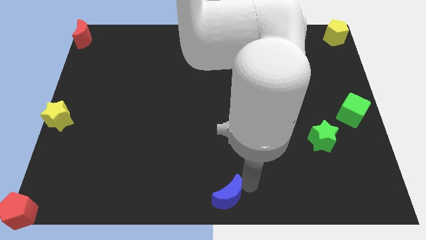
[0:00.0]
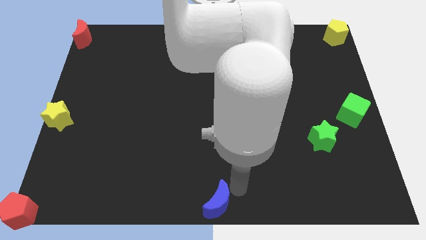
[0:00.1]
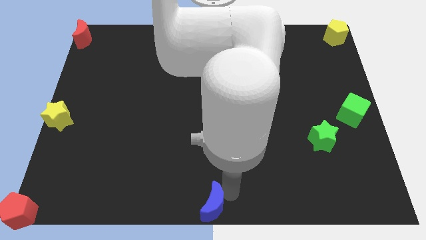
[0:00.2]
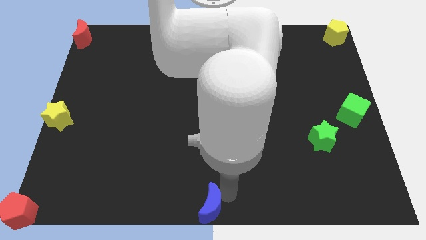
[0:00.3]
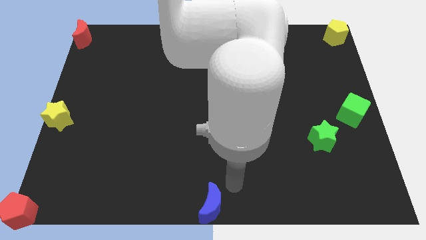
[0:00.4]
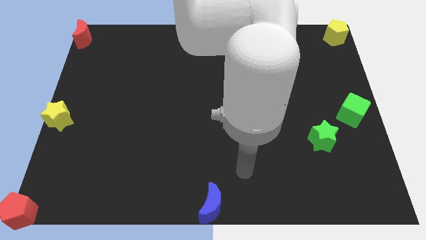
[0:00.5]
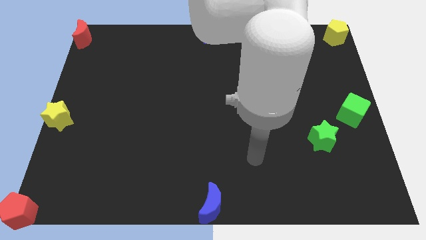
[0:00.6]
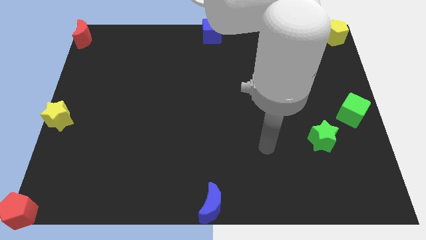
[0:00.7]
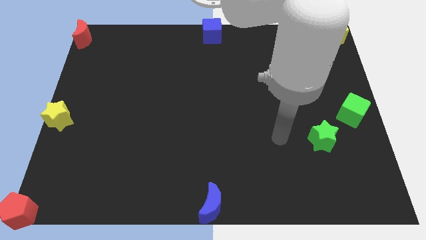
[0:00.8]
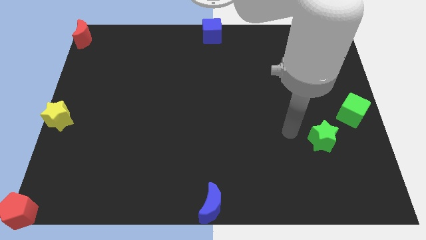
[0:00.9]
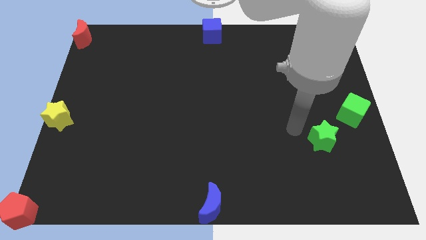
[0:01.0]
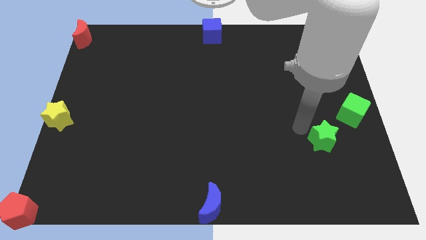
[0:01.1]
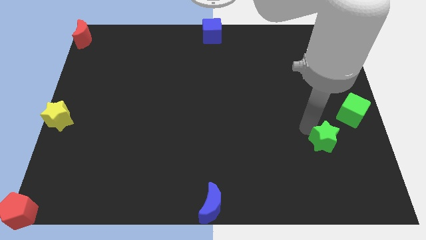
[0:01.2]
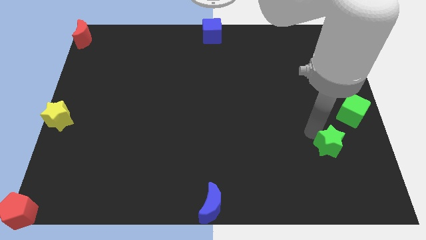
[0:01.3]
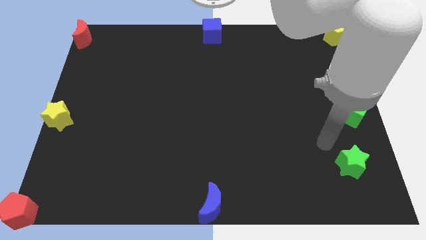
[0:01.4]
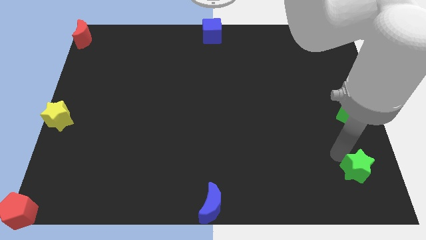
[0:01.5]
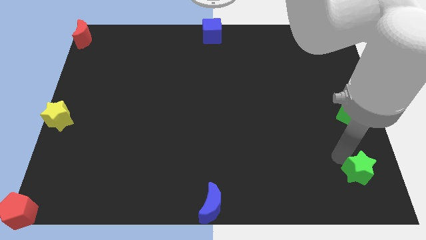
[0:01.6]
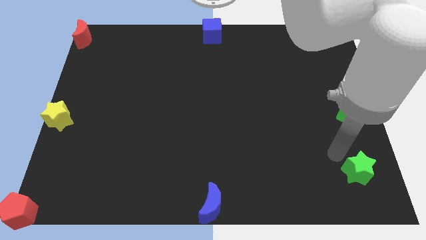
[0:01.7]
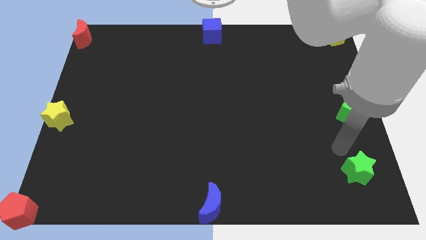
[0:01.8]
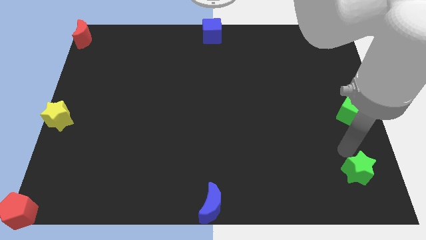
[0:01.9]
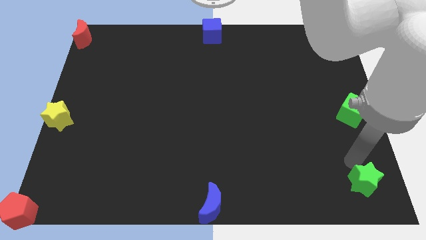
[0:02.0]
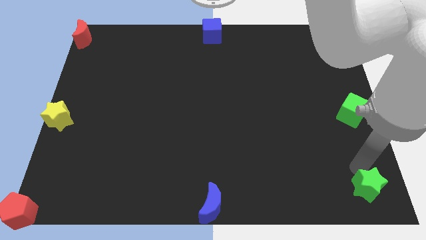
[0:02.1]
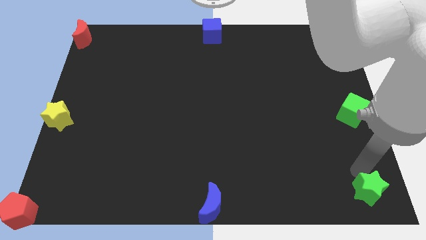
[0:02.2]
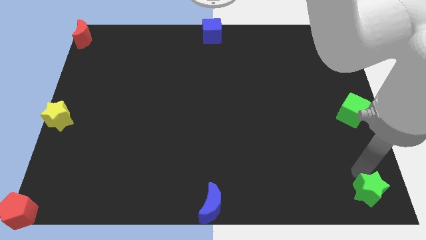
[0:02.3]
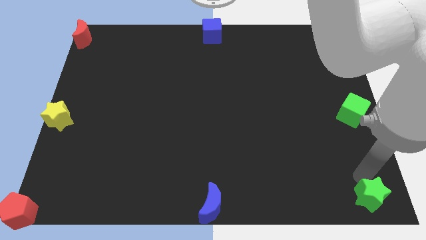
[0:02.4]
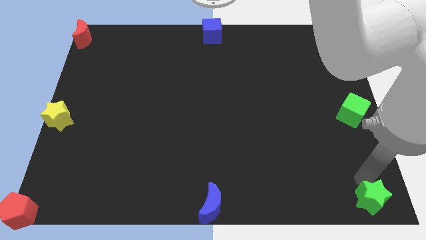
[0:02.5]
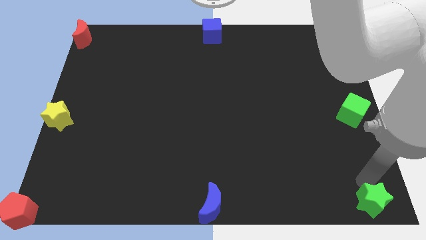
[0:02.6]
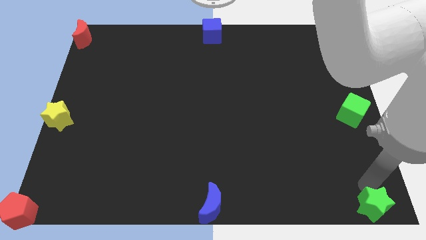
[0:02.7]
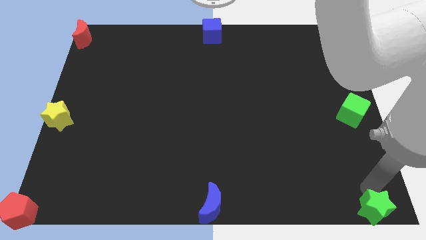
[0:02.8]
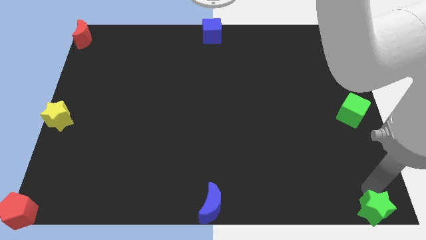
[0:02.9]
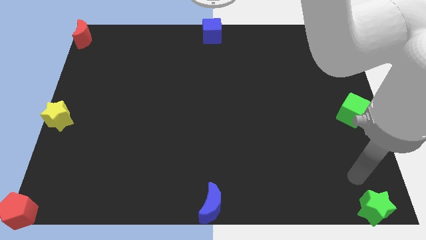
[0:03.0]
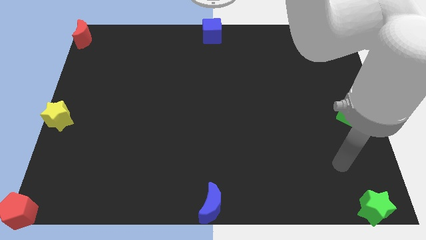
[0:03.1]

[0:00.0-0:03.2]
push the green star to the bottom right corner

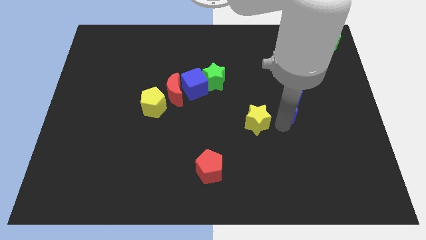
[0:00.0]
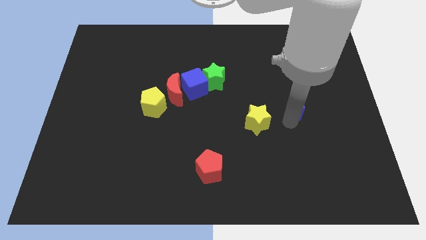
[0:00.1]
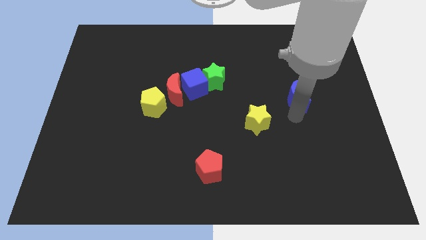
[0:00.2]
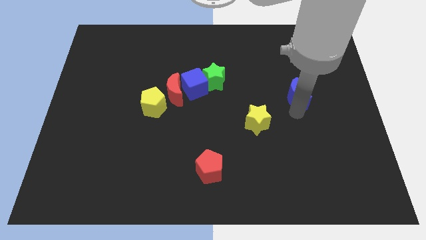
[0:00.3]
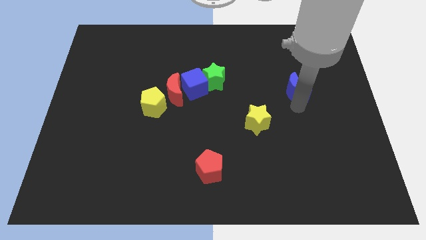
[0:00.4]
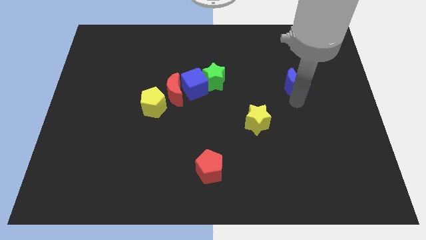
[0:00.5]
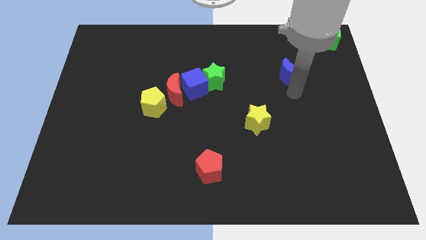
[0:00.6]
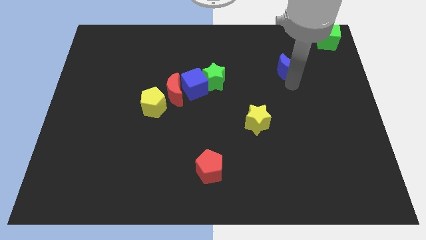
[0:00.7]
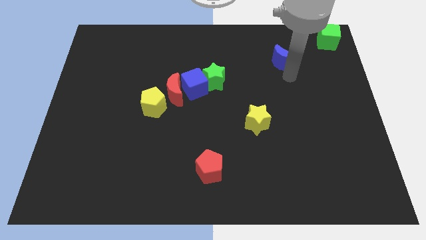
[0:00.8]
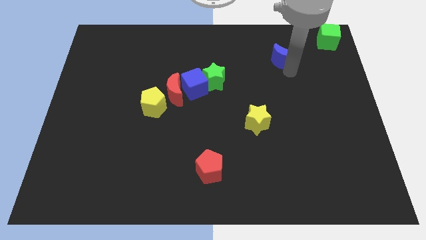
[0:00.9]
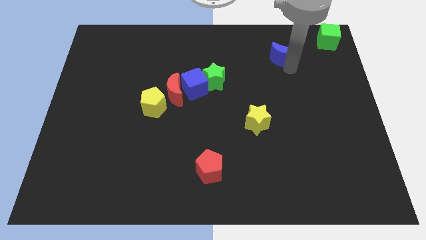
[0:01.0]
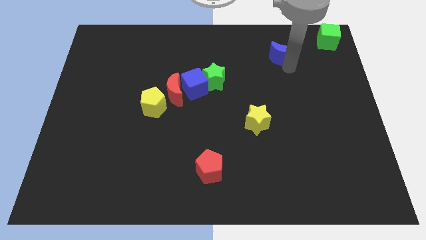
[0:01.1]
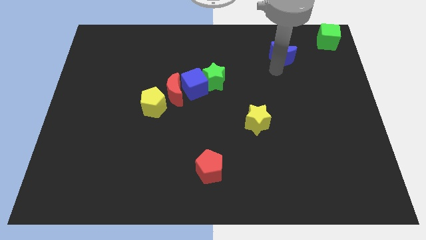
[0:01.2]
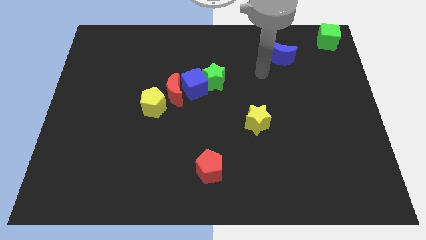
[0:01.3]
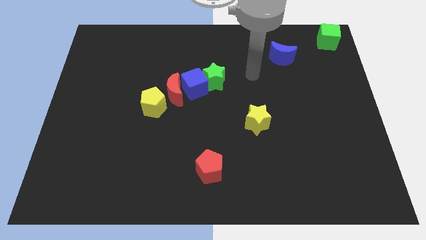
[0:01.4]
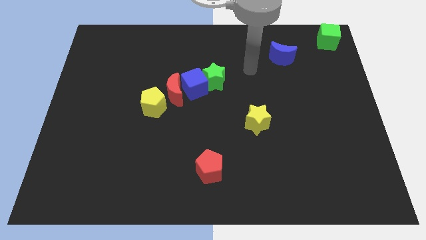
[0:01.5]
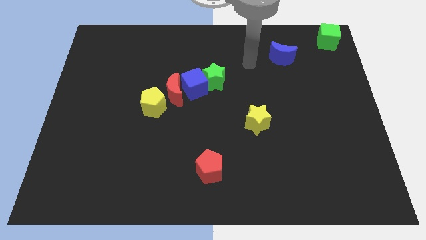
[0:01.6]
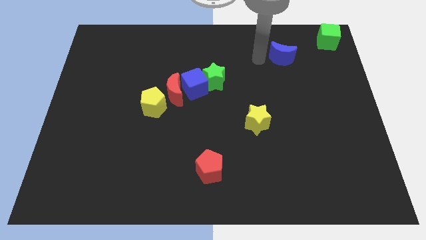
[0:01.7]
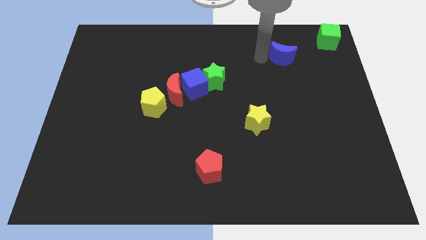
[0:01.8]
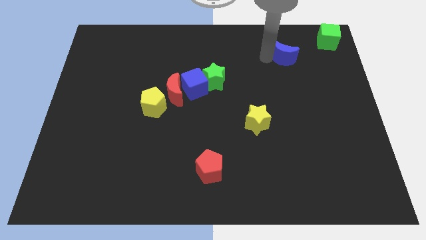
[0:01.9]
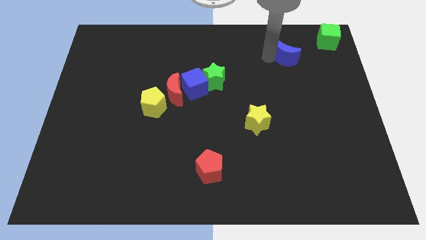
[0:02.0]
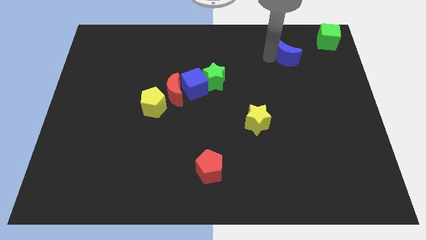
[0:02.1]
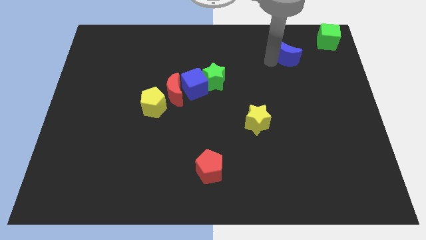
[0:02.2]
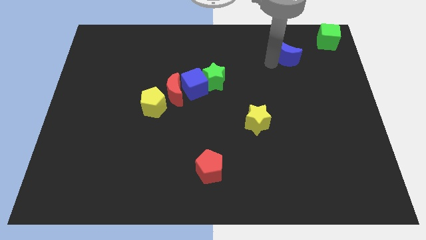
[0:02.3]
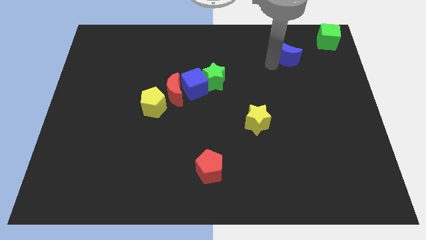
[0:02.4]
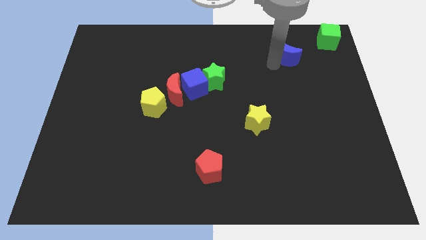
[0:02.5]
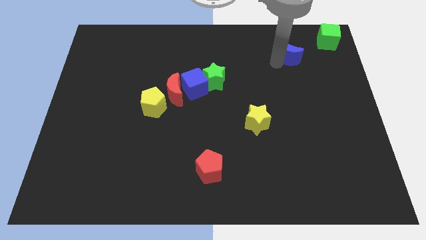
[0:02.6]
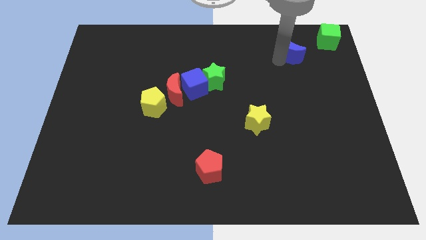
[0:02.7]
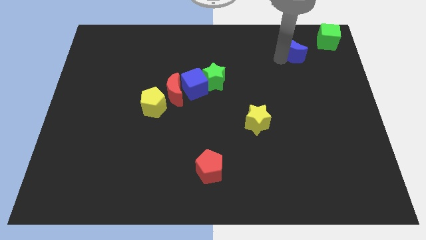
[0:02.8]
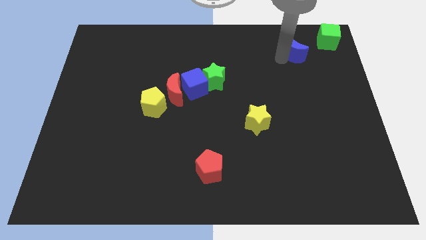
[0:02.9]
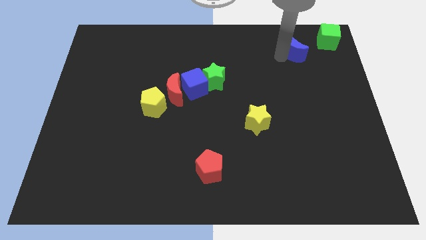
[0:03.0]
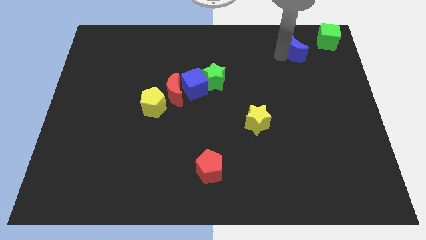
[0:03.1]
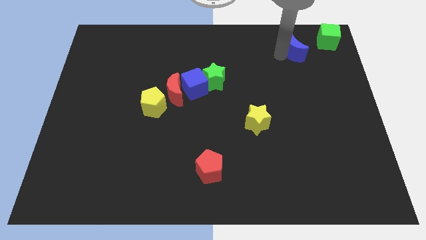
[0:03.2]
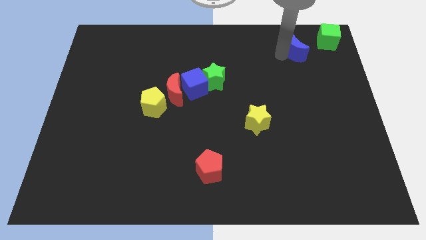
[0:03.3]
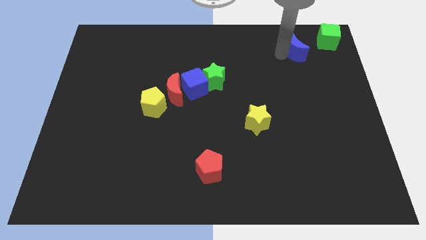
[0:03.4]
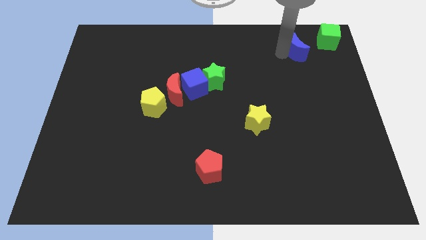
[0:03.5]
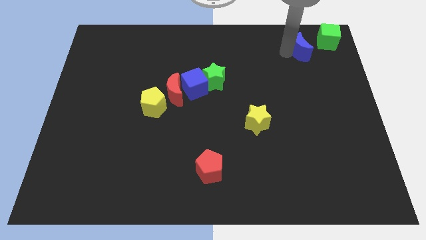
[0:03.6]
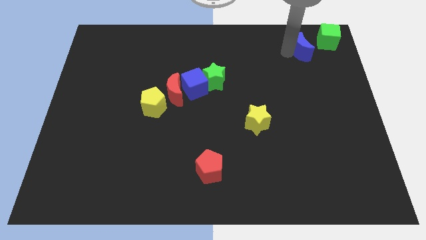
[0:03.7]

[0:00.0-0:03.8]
place the blue moon to the left of the green cube

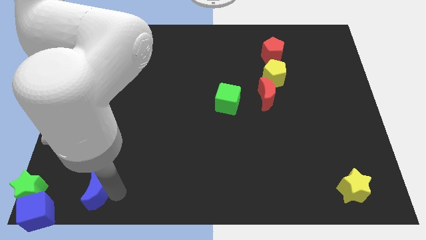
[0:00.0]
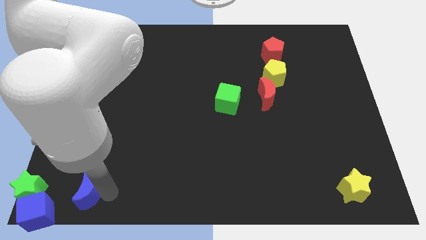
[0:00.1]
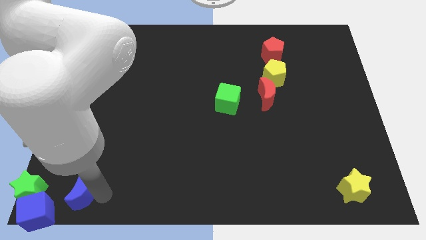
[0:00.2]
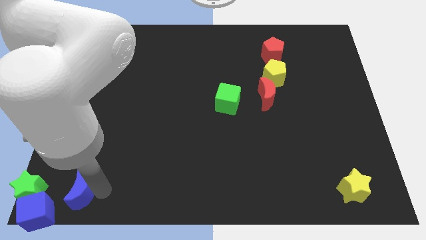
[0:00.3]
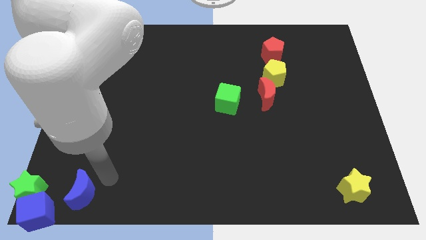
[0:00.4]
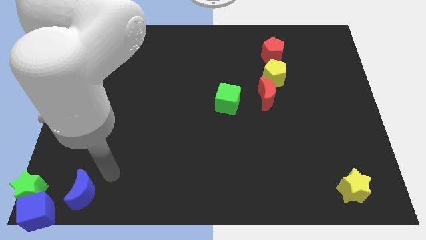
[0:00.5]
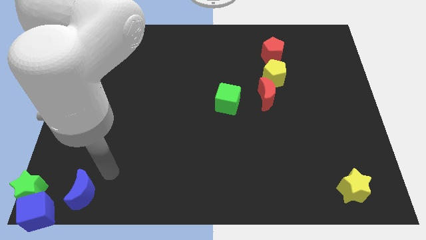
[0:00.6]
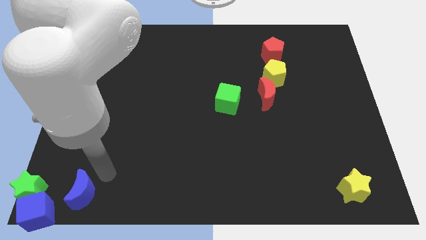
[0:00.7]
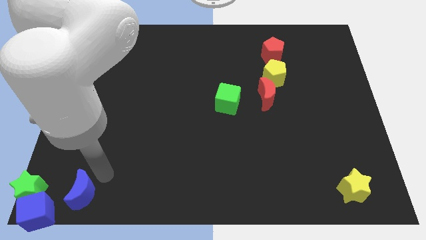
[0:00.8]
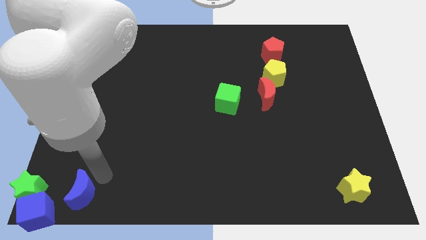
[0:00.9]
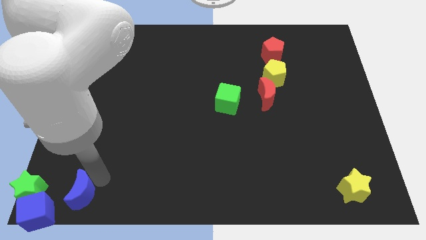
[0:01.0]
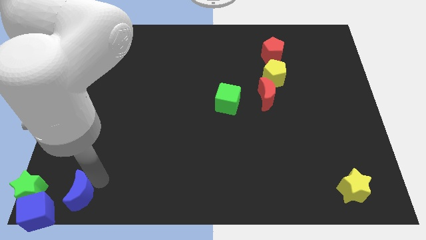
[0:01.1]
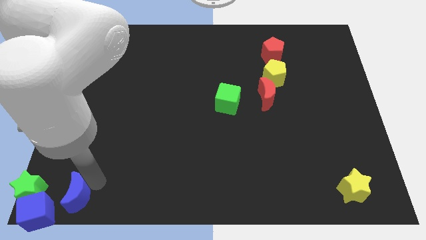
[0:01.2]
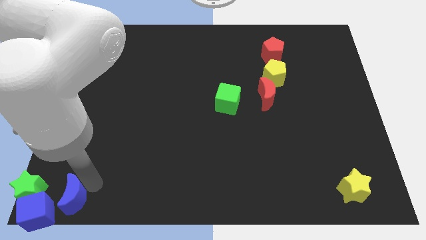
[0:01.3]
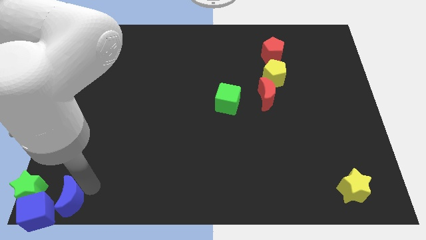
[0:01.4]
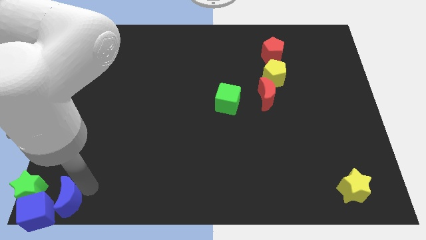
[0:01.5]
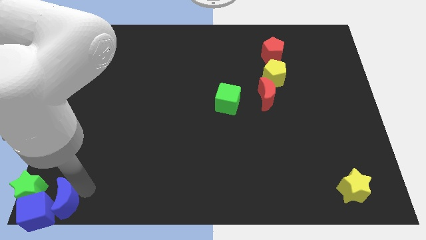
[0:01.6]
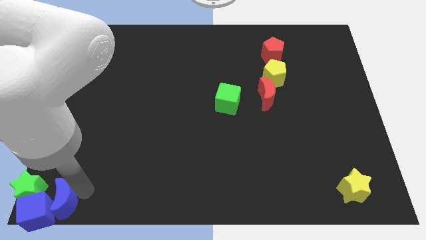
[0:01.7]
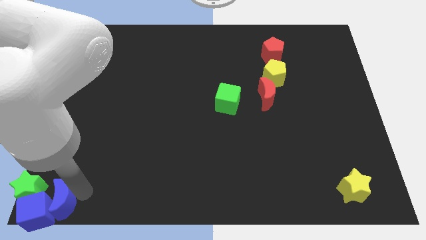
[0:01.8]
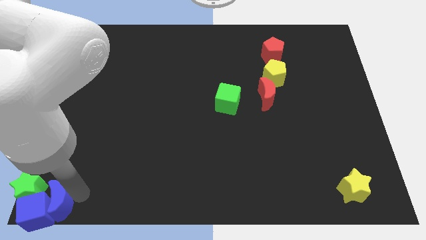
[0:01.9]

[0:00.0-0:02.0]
push the blue moon into the blue cube

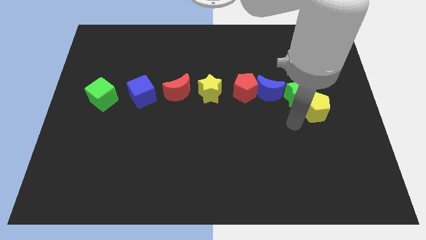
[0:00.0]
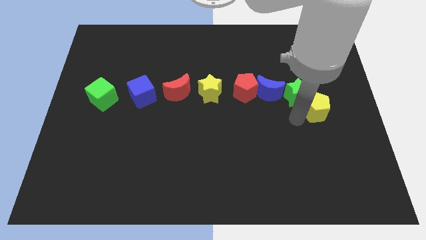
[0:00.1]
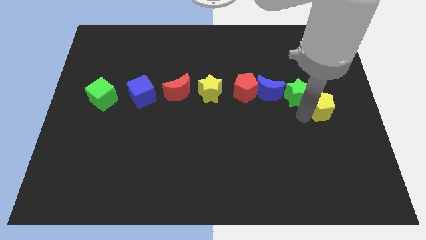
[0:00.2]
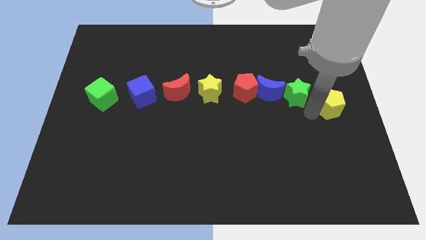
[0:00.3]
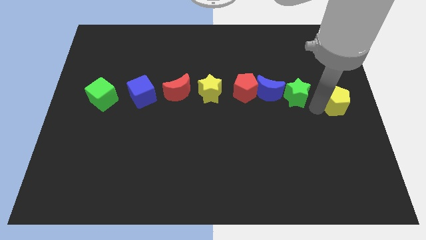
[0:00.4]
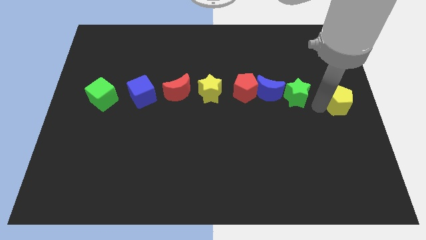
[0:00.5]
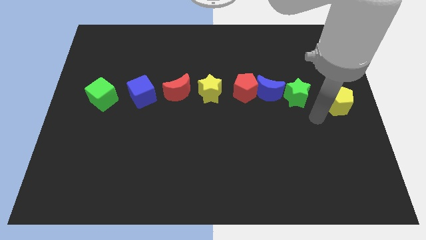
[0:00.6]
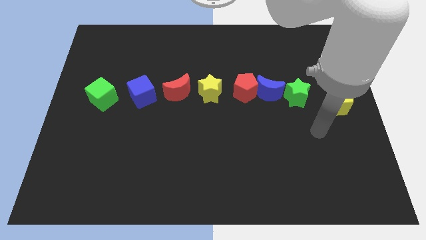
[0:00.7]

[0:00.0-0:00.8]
place your arm down towards the yellow pentagon
